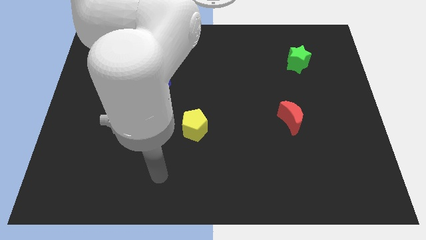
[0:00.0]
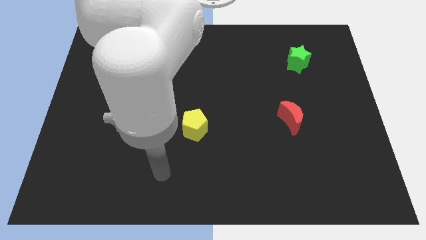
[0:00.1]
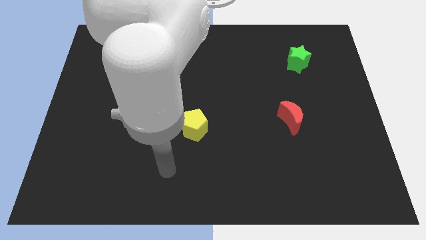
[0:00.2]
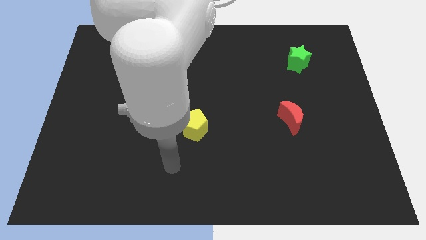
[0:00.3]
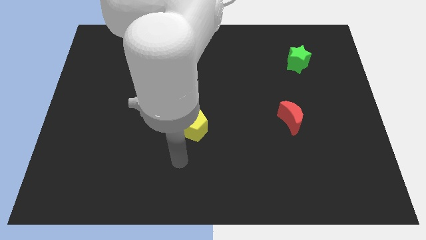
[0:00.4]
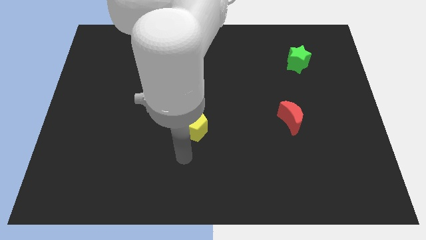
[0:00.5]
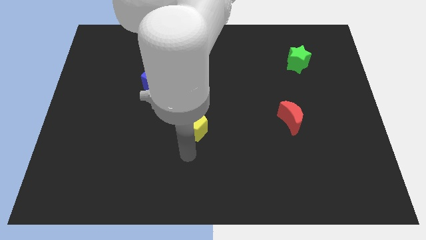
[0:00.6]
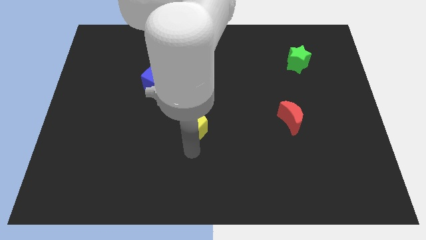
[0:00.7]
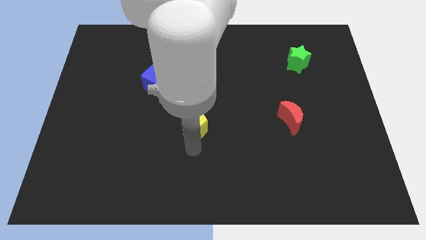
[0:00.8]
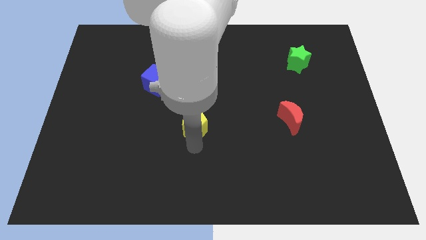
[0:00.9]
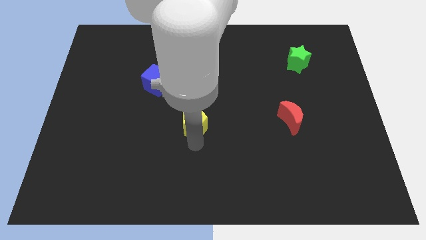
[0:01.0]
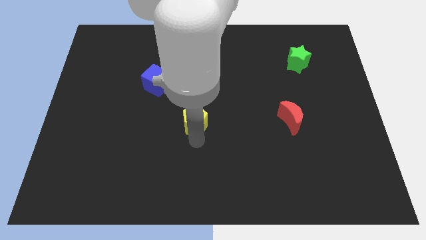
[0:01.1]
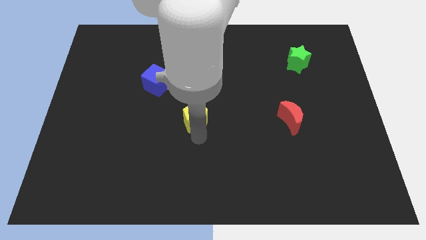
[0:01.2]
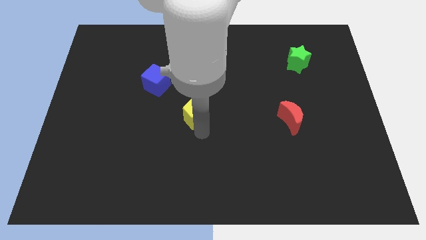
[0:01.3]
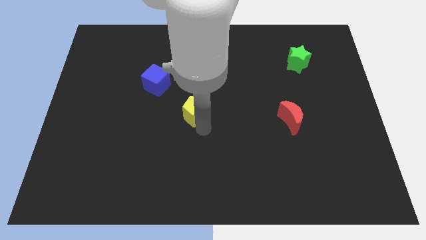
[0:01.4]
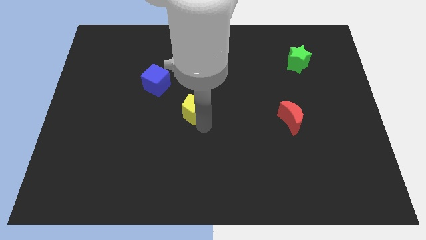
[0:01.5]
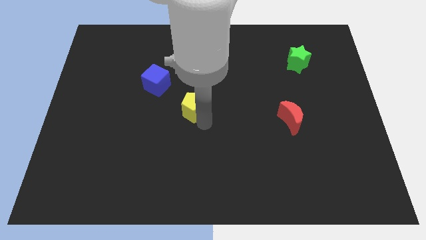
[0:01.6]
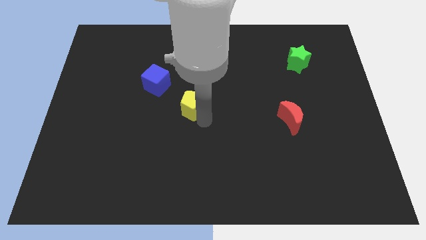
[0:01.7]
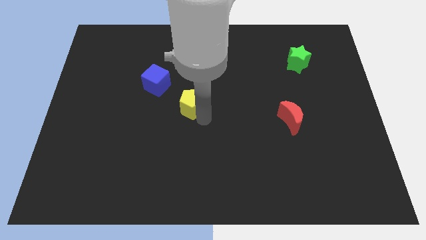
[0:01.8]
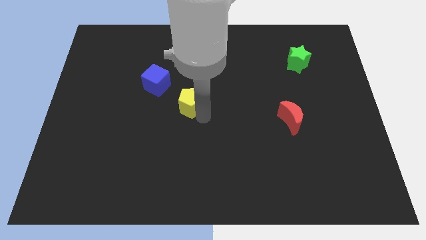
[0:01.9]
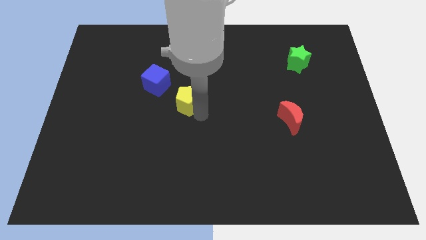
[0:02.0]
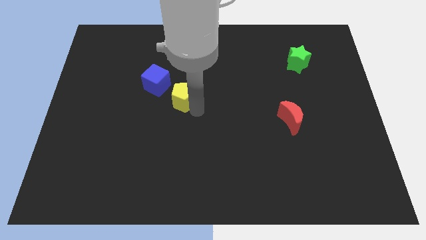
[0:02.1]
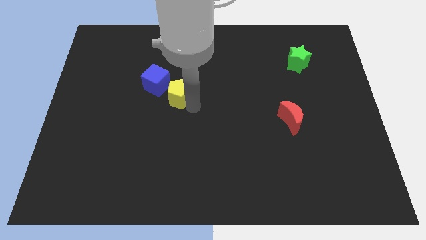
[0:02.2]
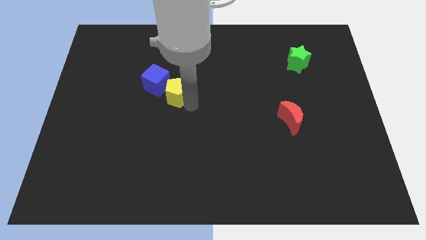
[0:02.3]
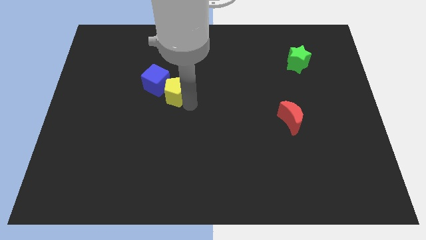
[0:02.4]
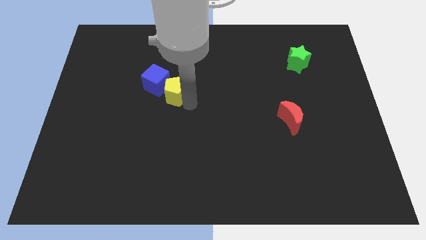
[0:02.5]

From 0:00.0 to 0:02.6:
slide the pentagon close to the cube

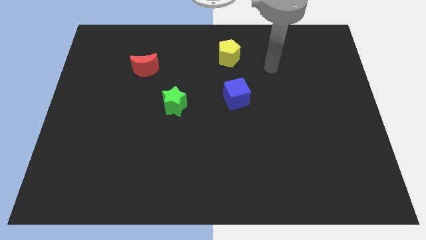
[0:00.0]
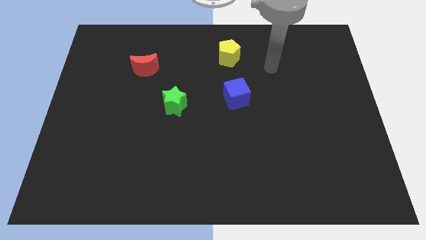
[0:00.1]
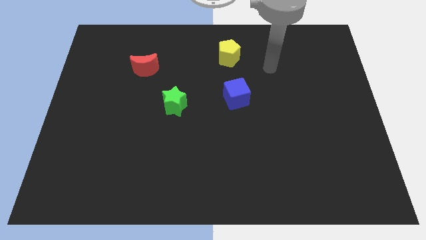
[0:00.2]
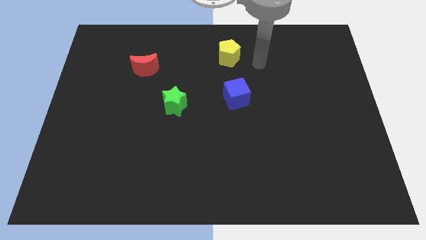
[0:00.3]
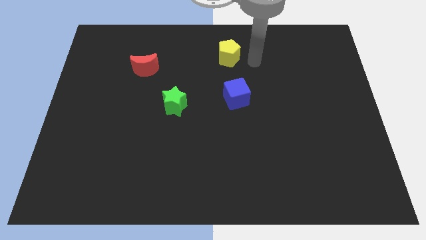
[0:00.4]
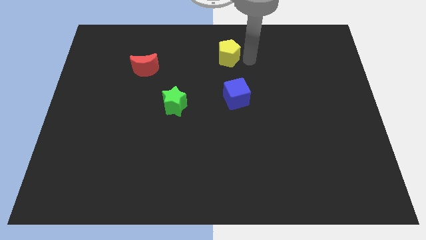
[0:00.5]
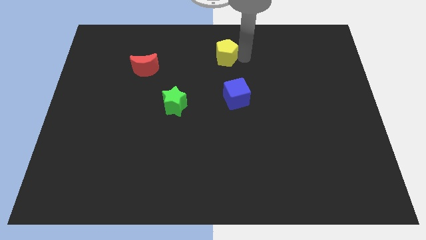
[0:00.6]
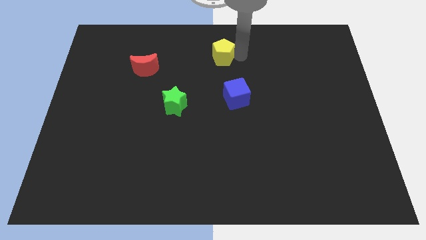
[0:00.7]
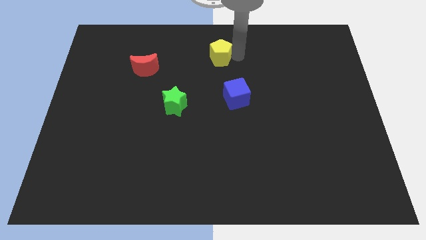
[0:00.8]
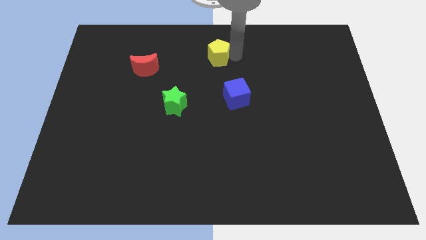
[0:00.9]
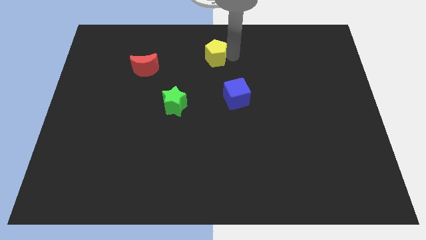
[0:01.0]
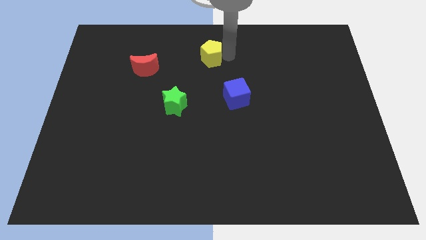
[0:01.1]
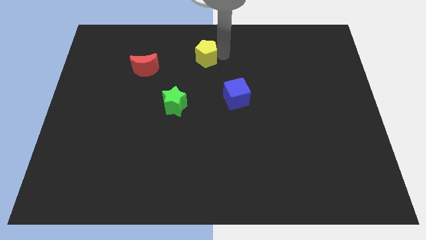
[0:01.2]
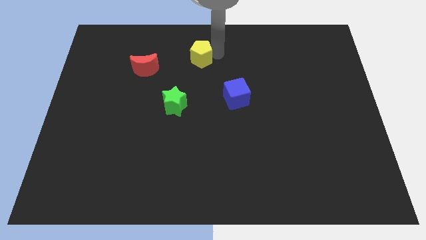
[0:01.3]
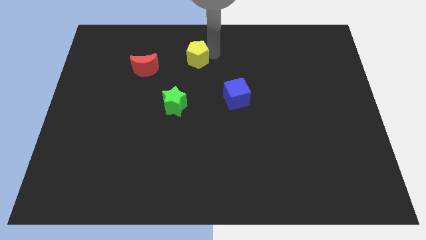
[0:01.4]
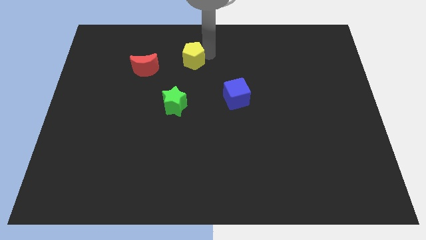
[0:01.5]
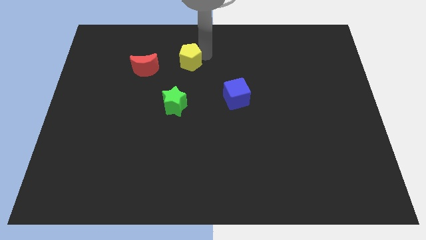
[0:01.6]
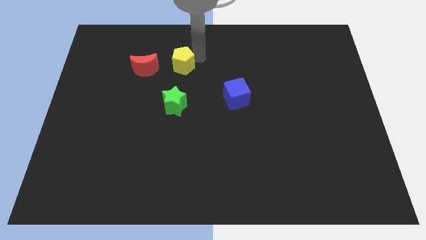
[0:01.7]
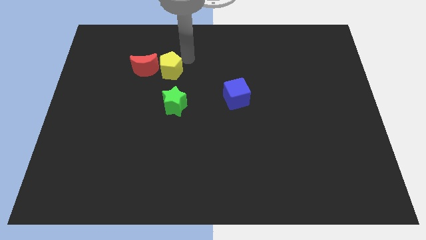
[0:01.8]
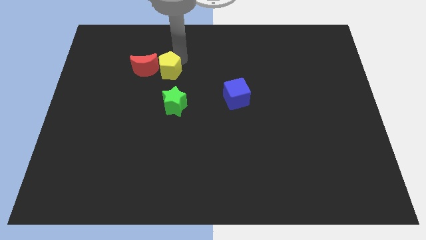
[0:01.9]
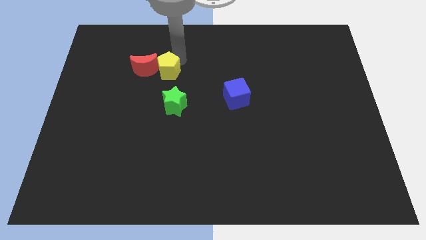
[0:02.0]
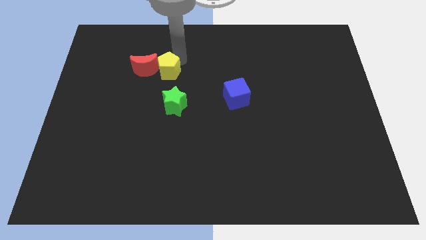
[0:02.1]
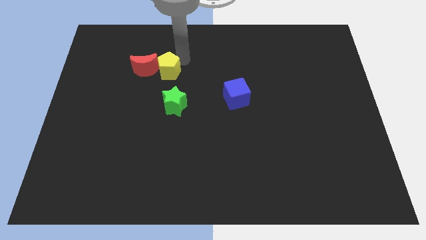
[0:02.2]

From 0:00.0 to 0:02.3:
put the pentagon towards the red moon

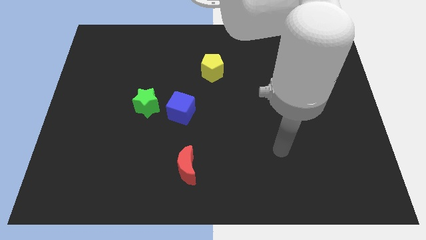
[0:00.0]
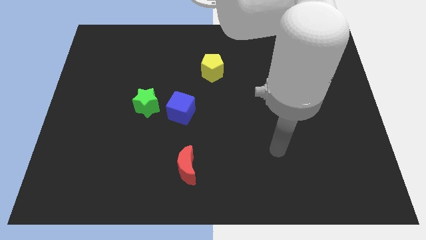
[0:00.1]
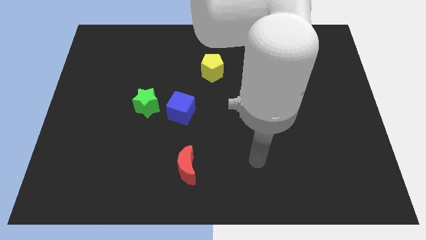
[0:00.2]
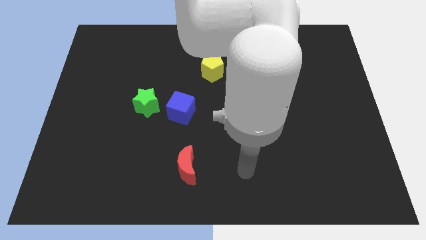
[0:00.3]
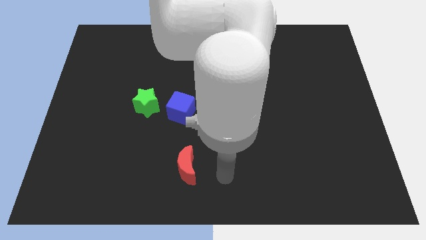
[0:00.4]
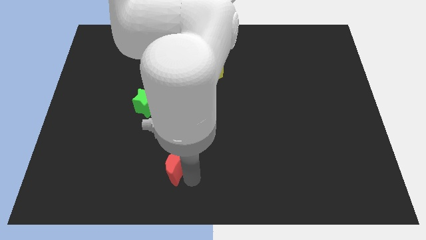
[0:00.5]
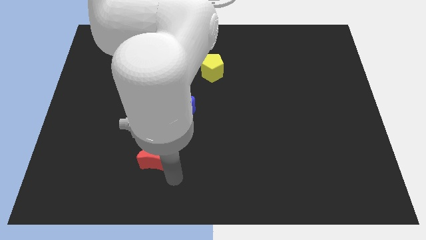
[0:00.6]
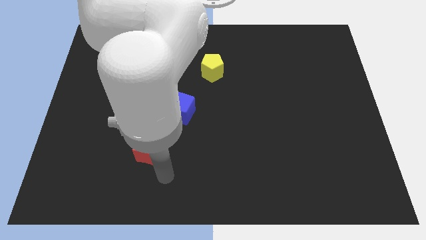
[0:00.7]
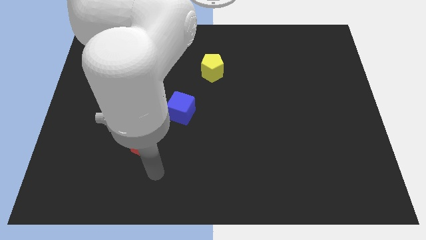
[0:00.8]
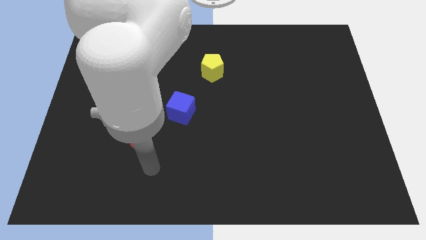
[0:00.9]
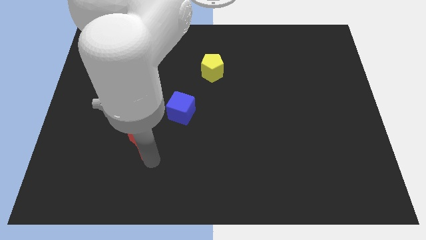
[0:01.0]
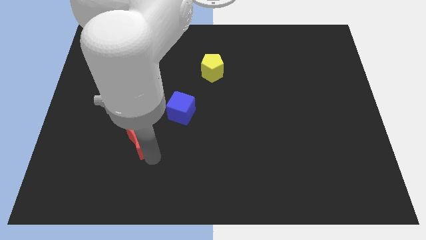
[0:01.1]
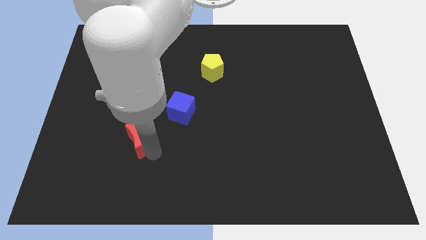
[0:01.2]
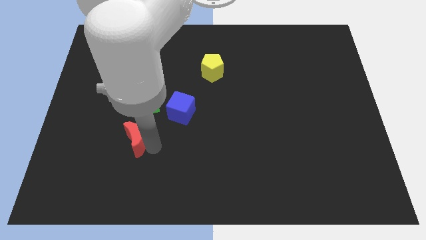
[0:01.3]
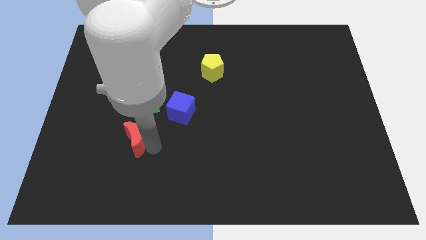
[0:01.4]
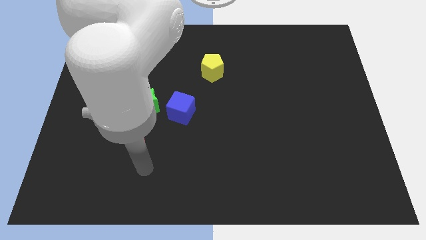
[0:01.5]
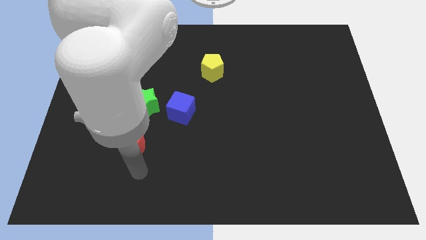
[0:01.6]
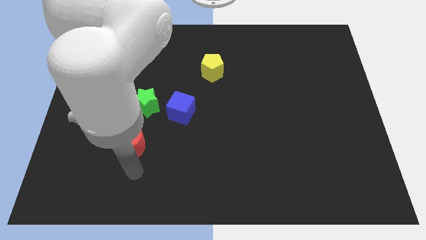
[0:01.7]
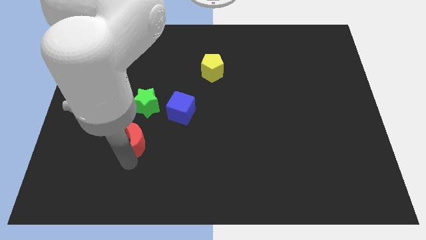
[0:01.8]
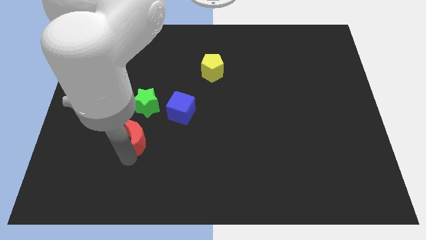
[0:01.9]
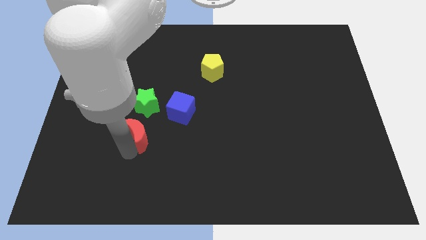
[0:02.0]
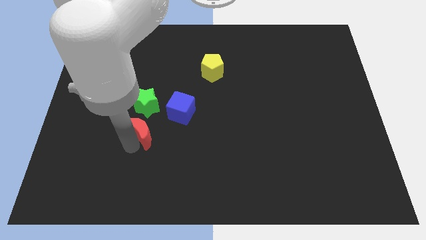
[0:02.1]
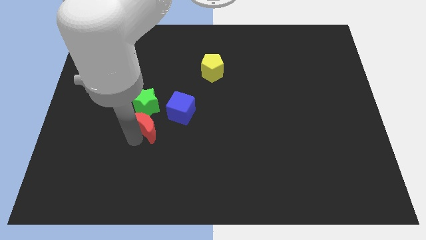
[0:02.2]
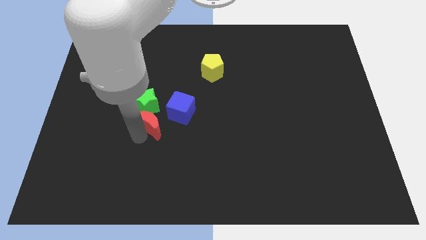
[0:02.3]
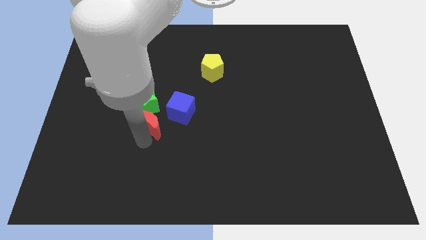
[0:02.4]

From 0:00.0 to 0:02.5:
move the red block to the green star

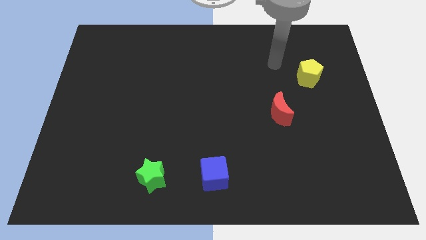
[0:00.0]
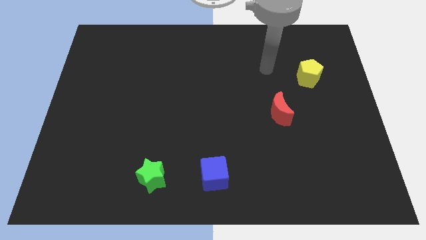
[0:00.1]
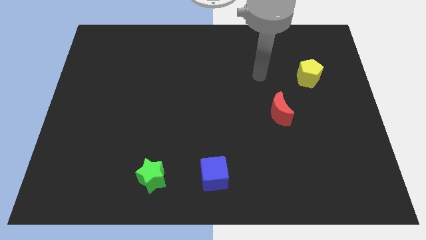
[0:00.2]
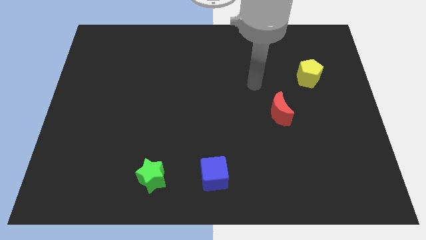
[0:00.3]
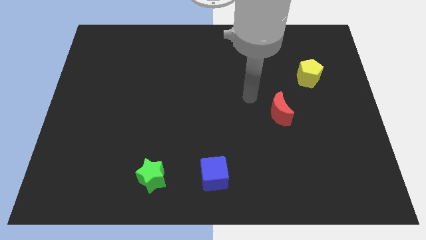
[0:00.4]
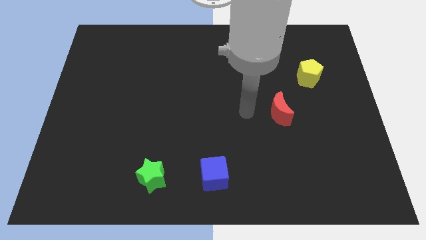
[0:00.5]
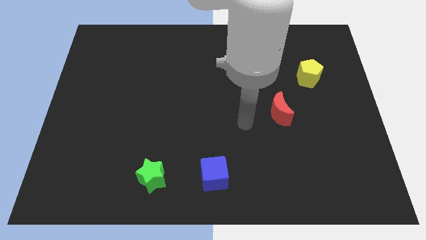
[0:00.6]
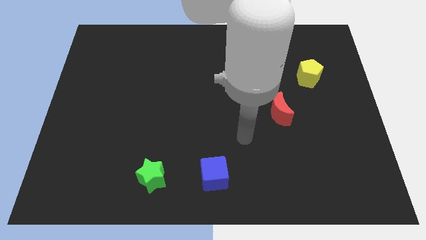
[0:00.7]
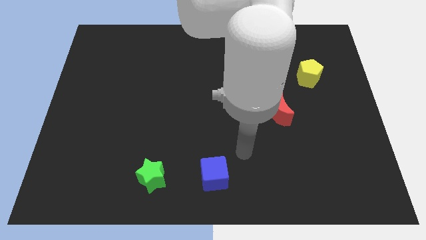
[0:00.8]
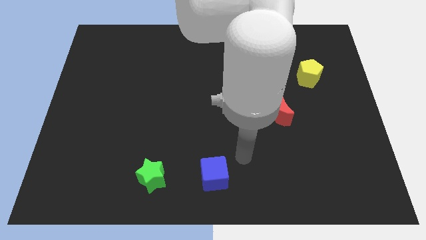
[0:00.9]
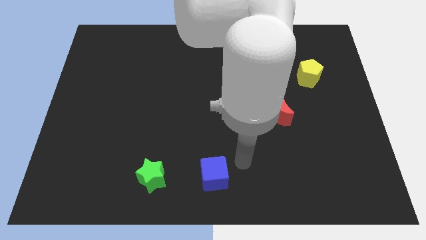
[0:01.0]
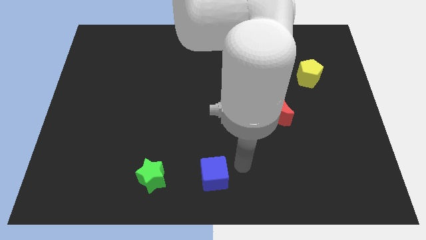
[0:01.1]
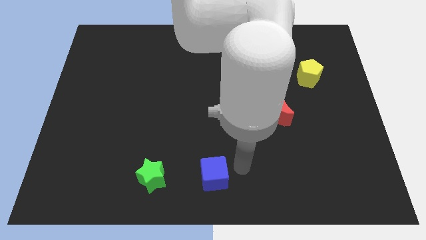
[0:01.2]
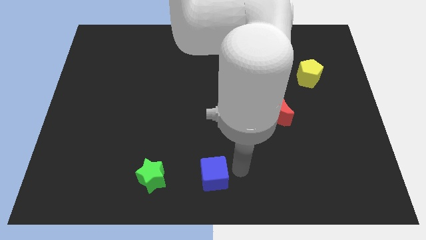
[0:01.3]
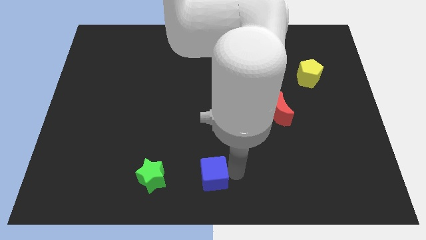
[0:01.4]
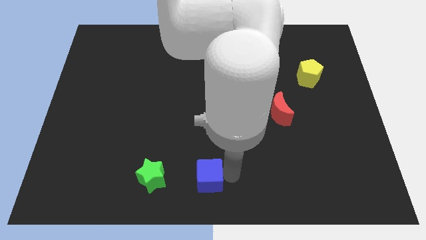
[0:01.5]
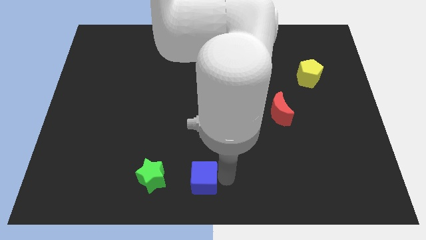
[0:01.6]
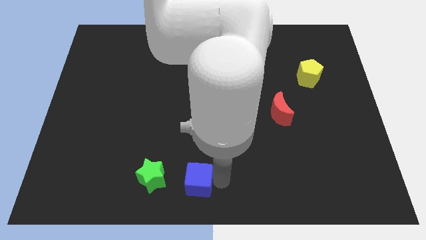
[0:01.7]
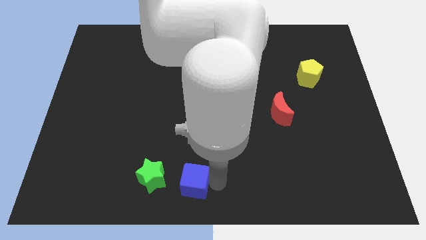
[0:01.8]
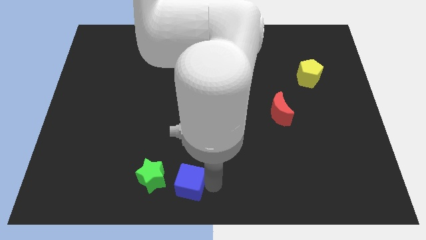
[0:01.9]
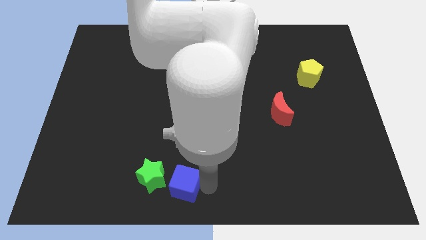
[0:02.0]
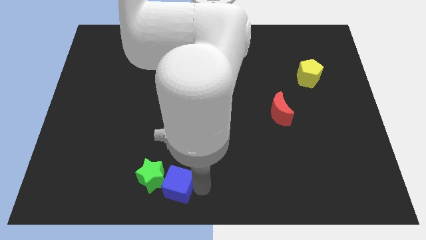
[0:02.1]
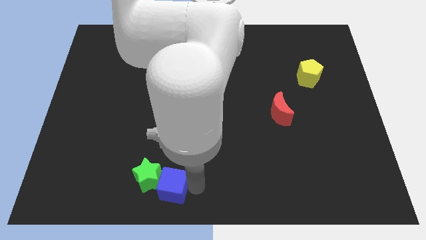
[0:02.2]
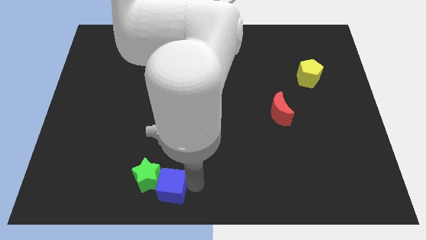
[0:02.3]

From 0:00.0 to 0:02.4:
slide the blue block to the green block
